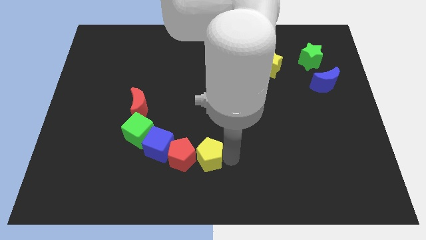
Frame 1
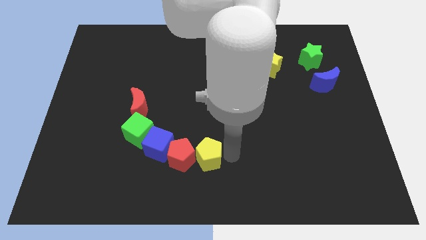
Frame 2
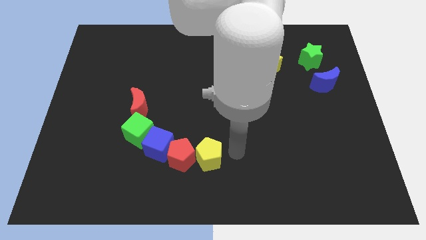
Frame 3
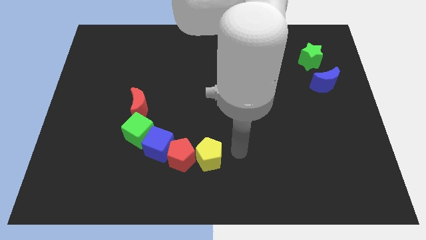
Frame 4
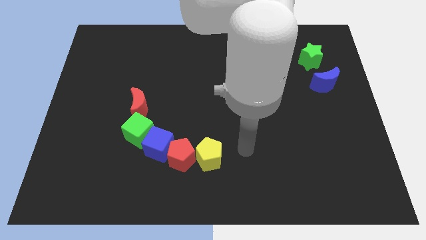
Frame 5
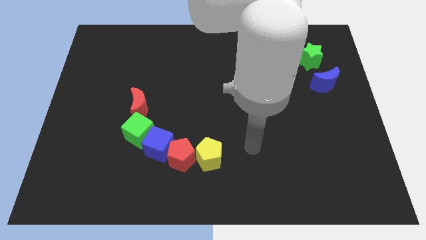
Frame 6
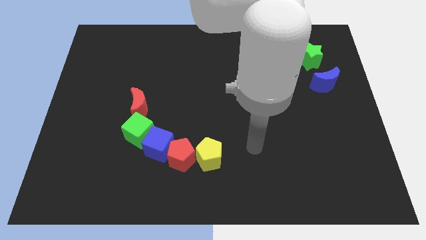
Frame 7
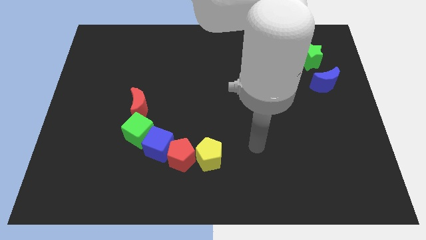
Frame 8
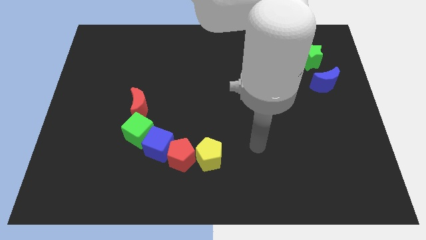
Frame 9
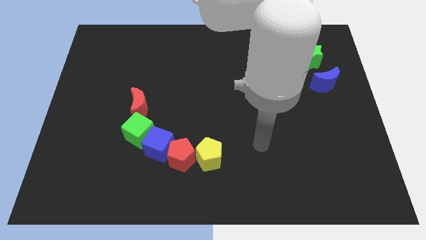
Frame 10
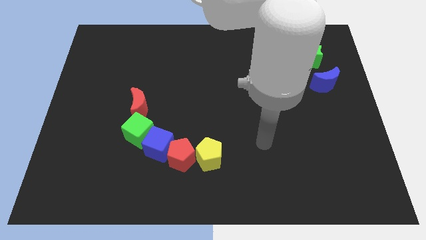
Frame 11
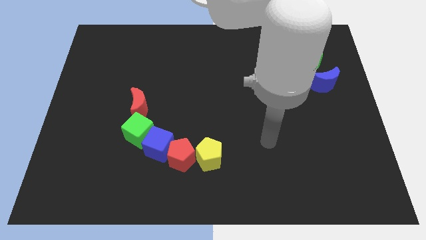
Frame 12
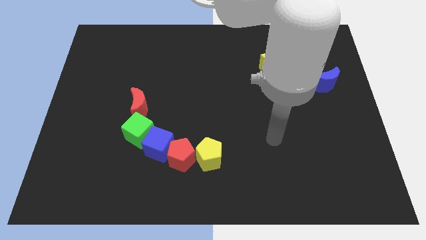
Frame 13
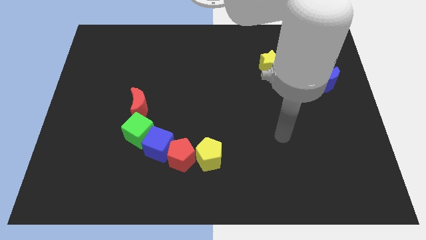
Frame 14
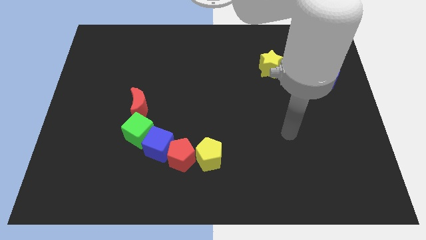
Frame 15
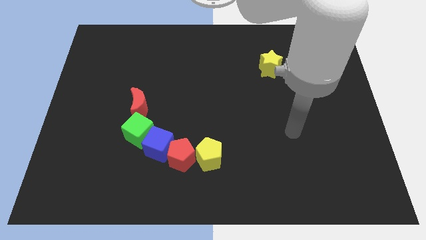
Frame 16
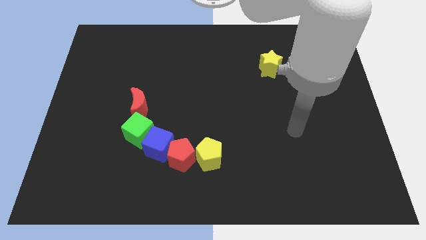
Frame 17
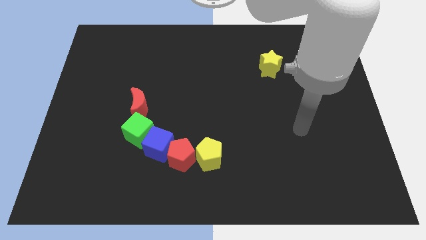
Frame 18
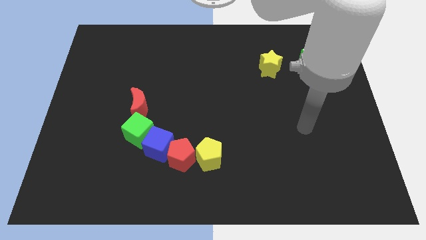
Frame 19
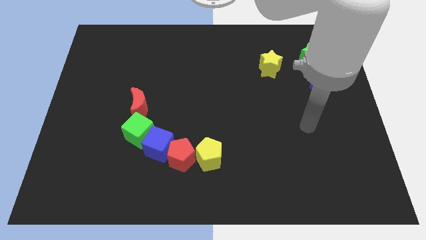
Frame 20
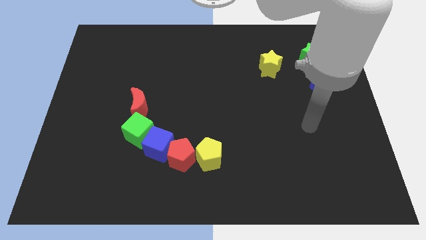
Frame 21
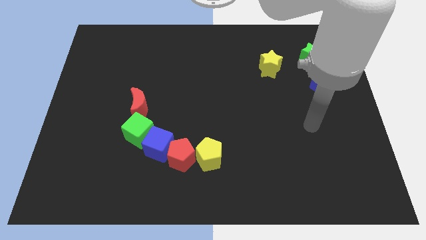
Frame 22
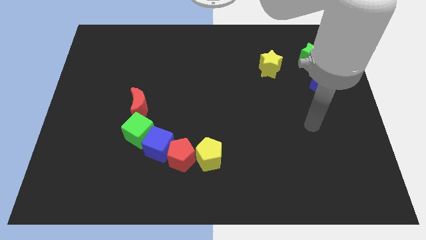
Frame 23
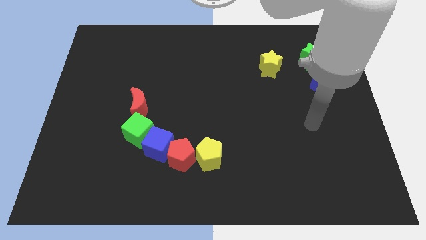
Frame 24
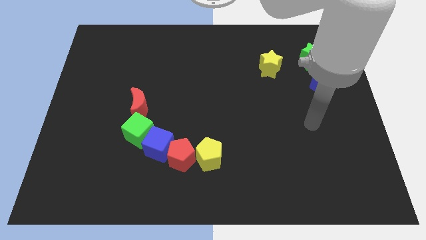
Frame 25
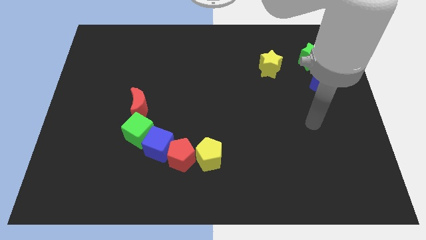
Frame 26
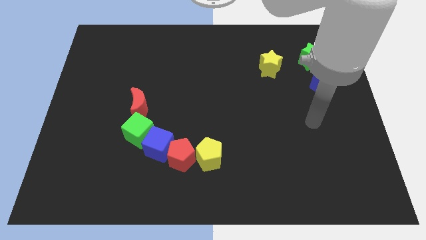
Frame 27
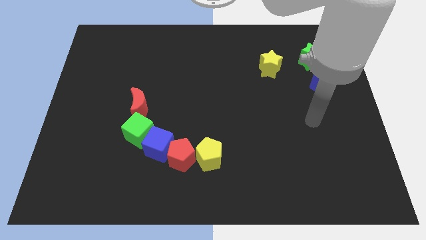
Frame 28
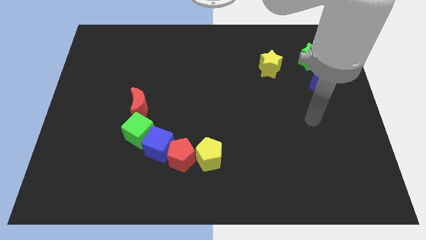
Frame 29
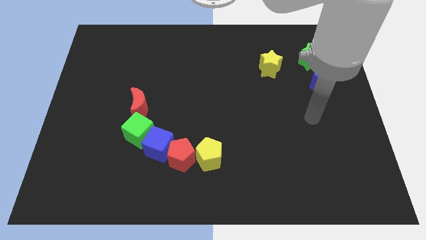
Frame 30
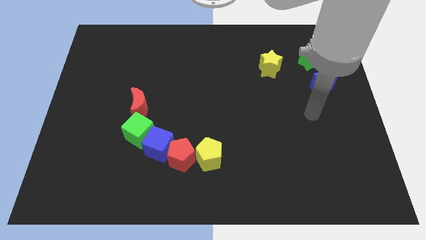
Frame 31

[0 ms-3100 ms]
move your arm away from yellow pentagon

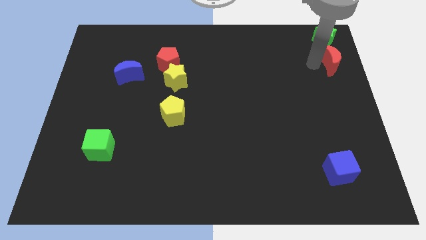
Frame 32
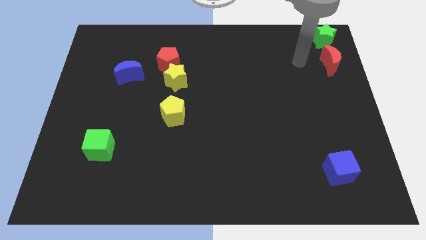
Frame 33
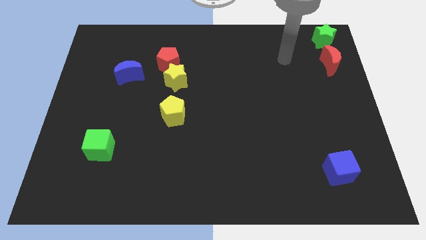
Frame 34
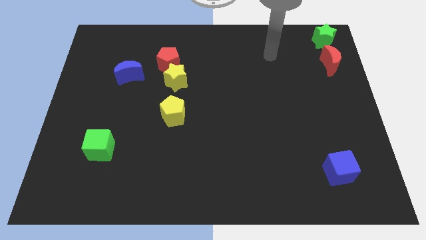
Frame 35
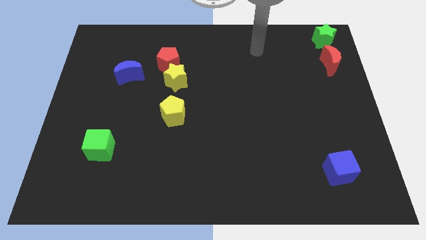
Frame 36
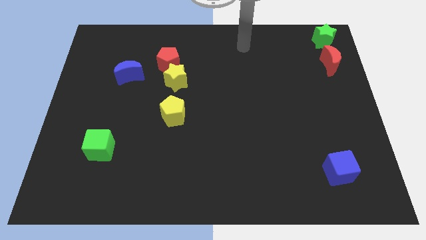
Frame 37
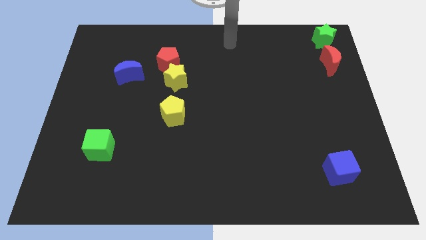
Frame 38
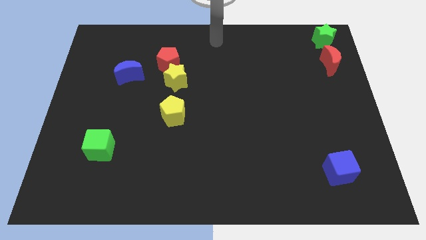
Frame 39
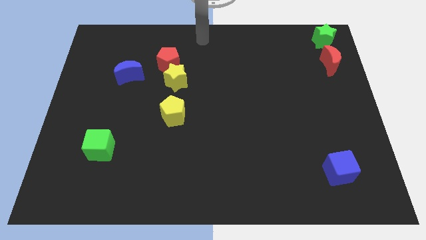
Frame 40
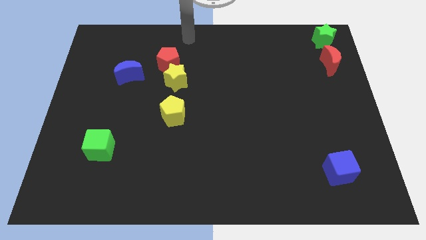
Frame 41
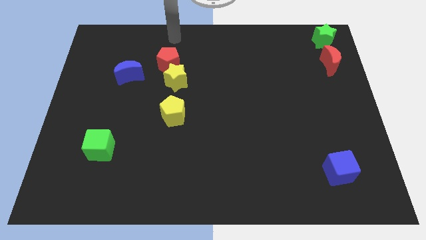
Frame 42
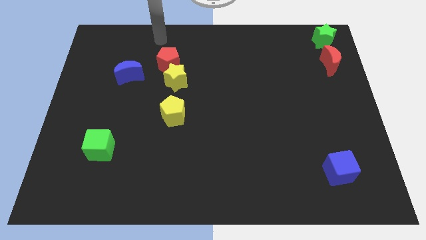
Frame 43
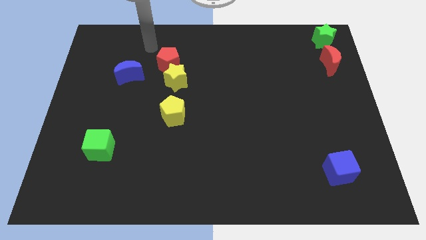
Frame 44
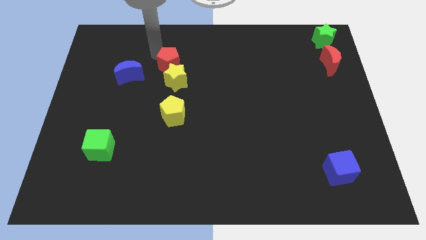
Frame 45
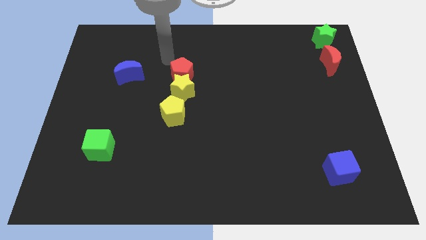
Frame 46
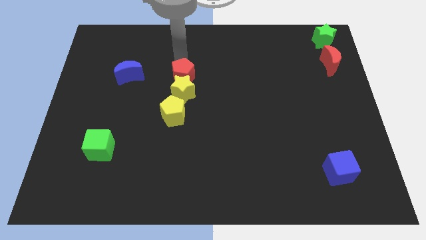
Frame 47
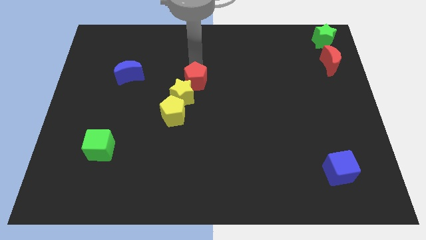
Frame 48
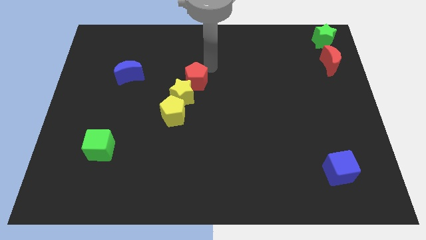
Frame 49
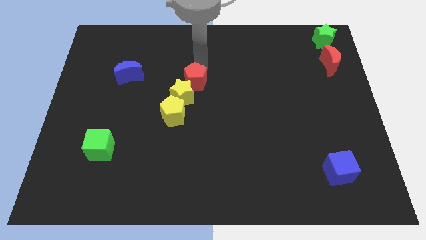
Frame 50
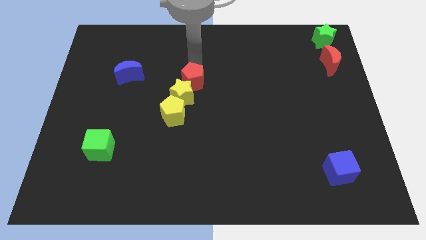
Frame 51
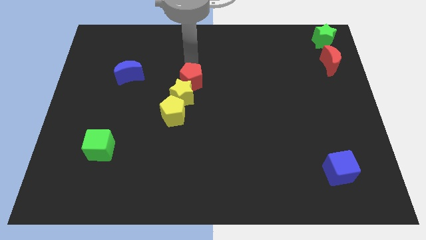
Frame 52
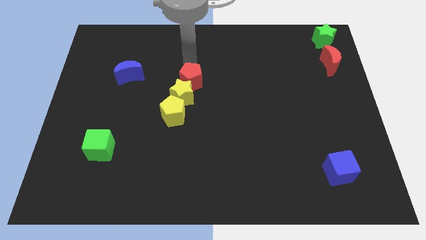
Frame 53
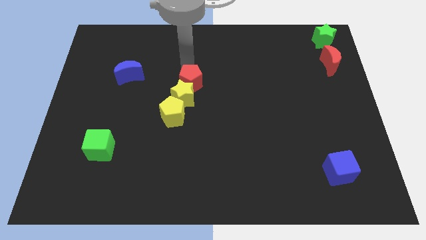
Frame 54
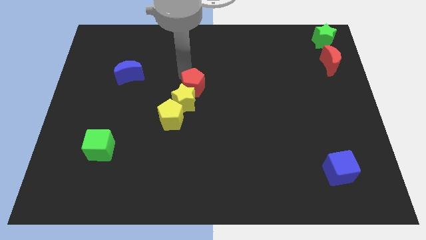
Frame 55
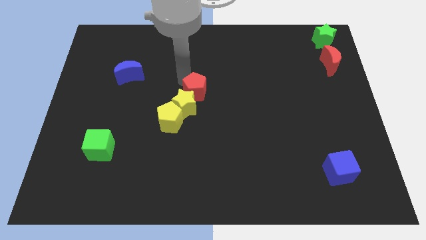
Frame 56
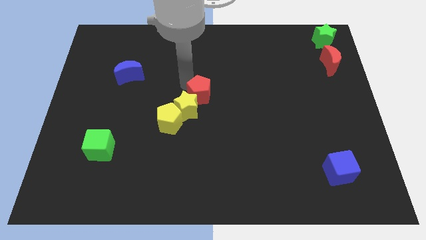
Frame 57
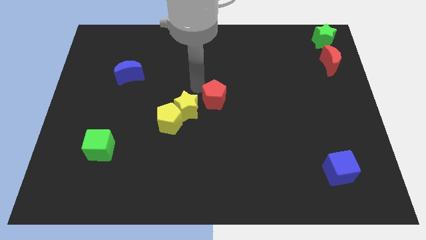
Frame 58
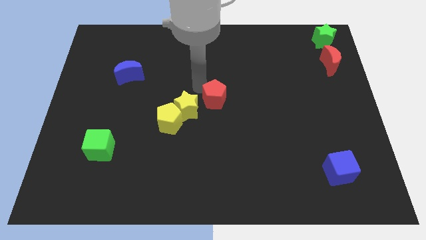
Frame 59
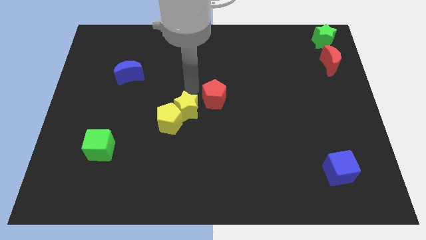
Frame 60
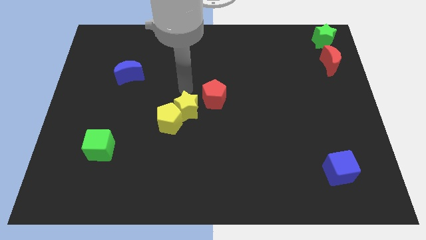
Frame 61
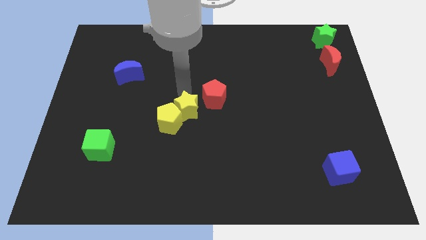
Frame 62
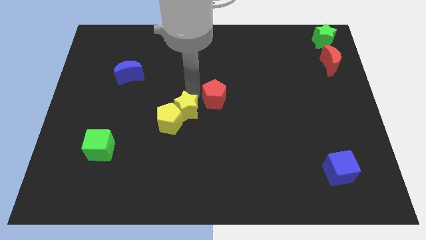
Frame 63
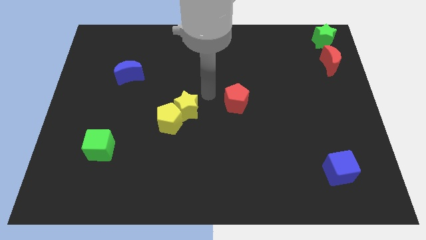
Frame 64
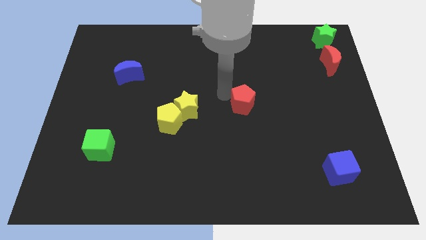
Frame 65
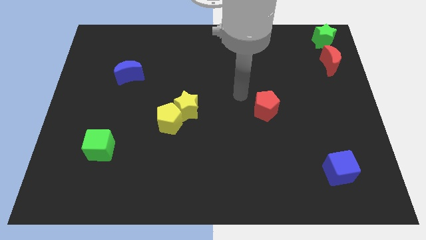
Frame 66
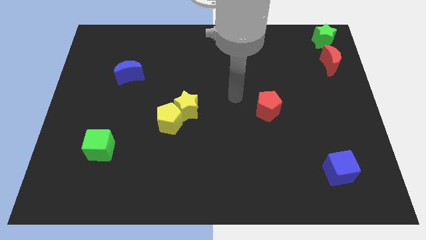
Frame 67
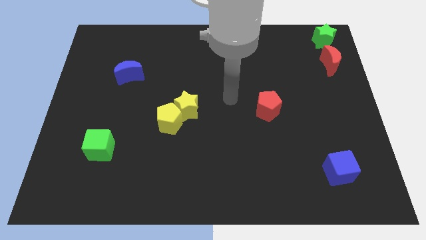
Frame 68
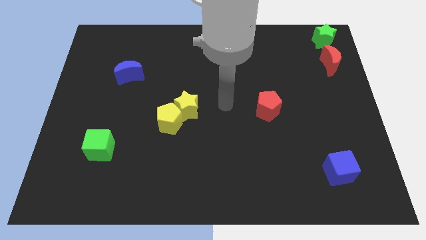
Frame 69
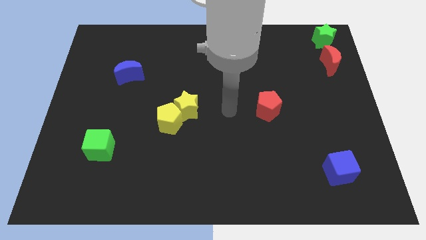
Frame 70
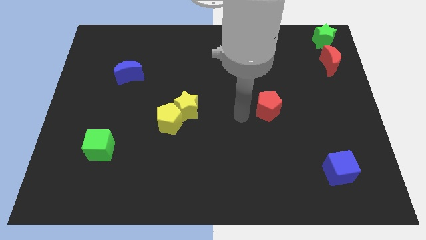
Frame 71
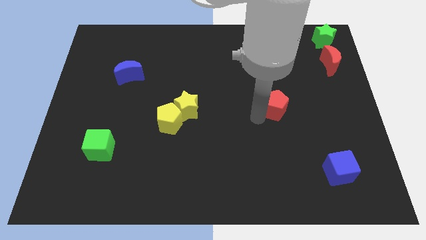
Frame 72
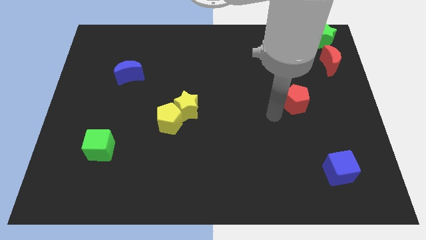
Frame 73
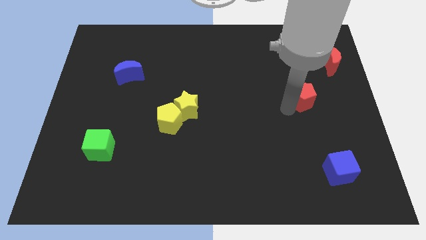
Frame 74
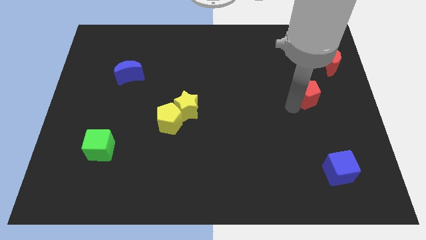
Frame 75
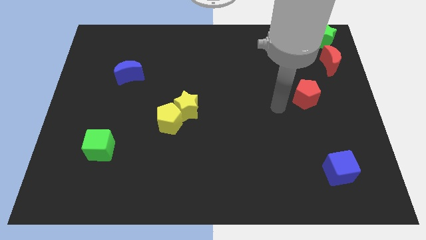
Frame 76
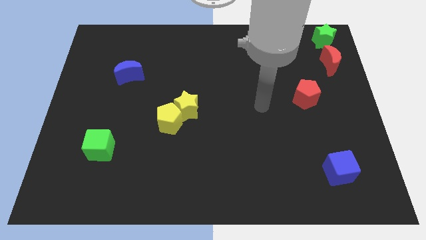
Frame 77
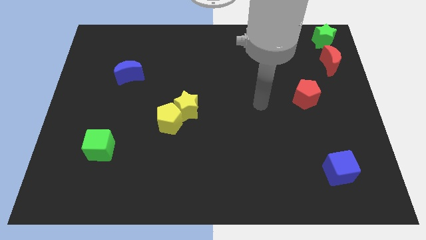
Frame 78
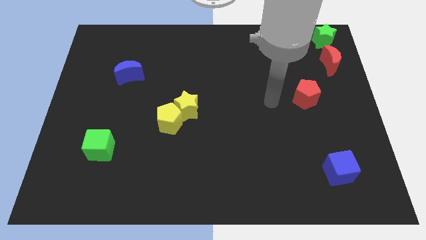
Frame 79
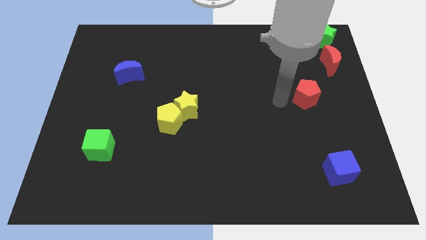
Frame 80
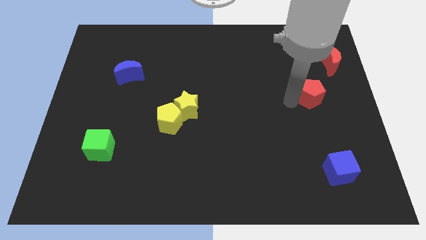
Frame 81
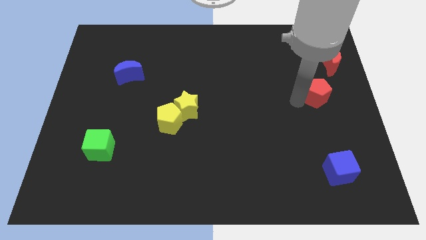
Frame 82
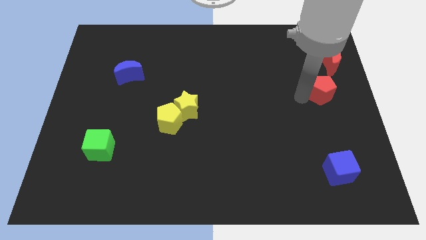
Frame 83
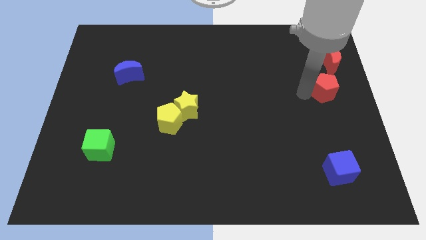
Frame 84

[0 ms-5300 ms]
move the red pentagon towards the bottom side of the red crescent

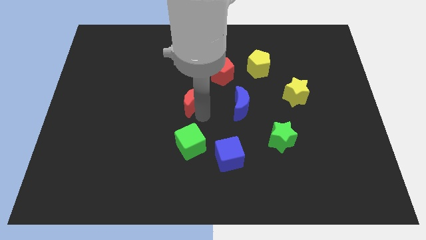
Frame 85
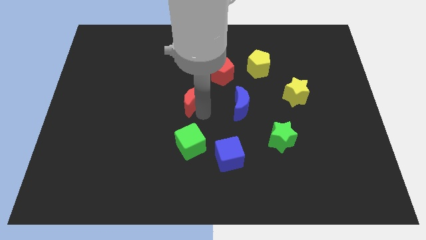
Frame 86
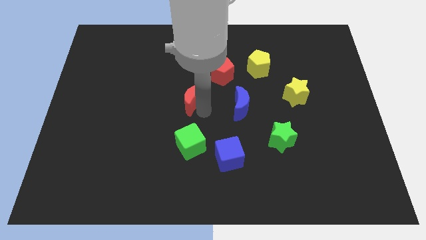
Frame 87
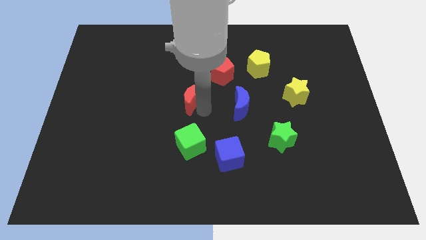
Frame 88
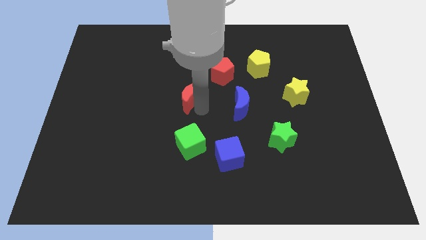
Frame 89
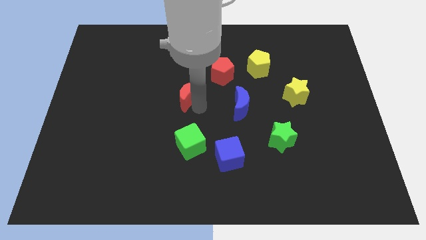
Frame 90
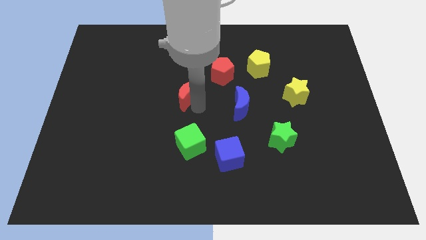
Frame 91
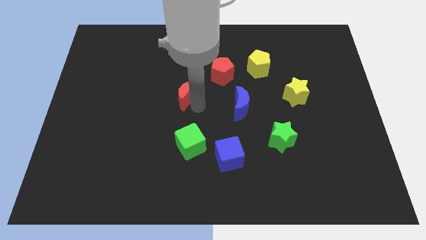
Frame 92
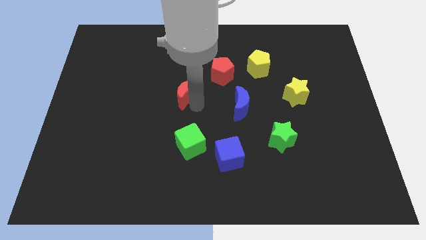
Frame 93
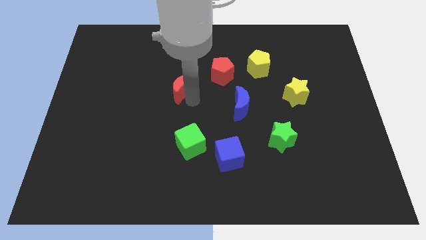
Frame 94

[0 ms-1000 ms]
move the red crescent slightly towards top of the board
